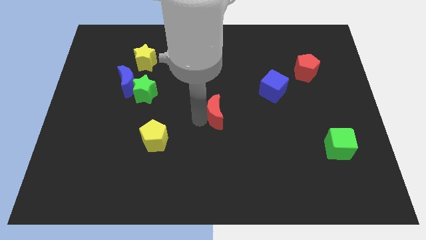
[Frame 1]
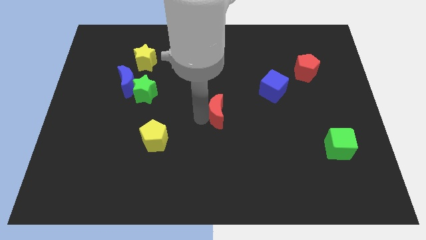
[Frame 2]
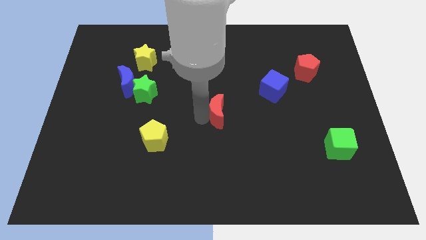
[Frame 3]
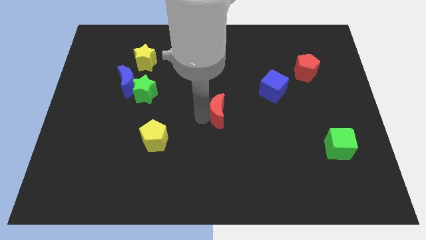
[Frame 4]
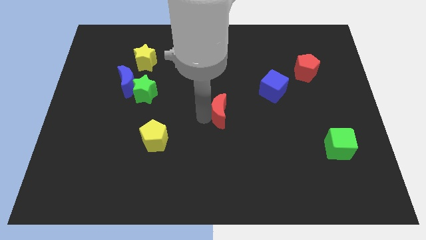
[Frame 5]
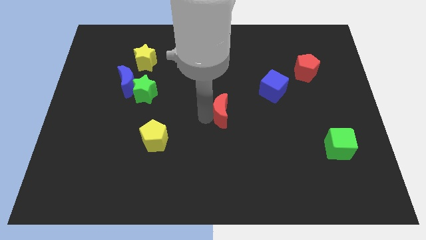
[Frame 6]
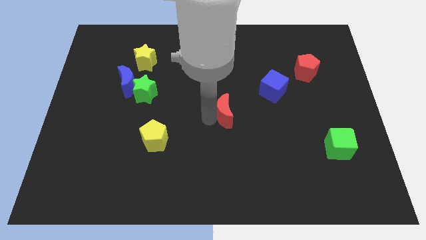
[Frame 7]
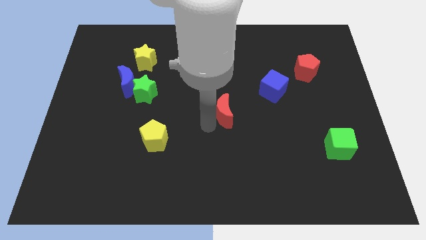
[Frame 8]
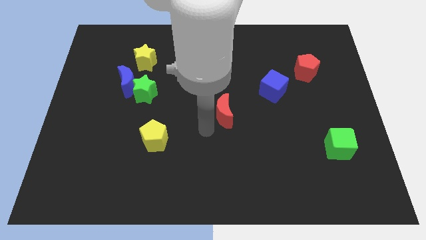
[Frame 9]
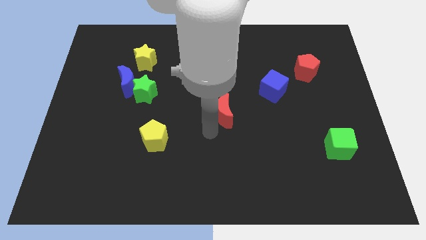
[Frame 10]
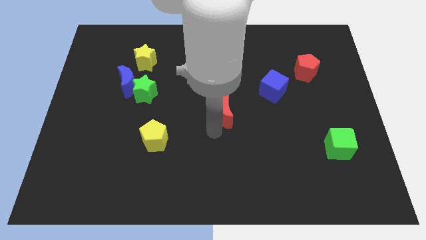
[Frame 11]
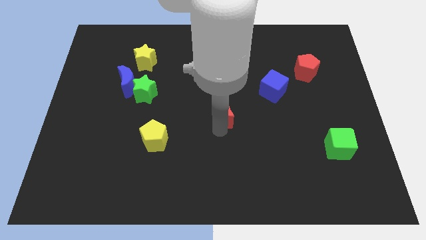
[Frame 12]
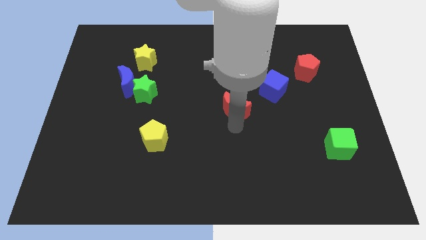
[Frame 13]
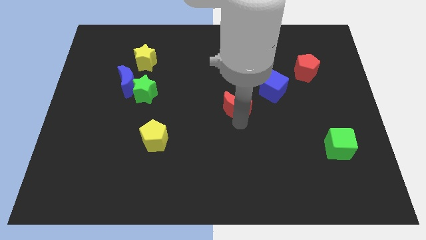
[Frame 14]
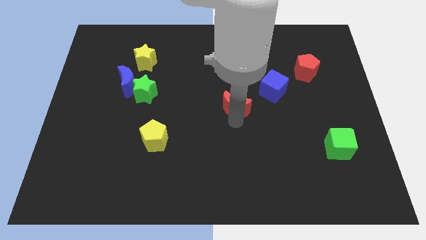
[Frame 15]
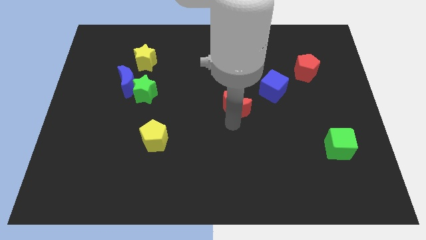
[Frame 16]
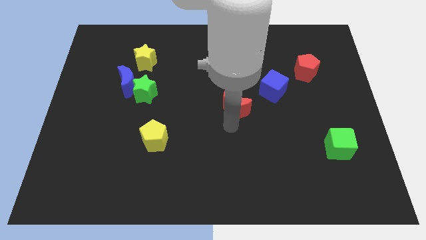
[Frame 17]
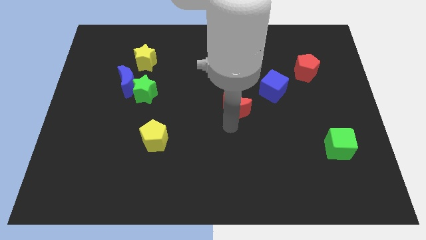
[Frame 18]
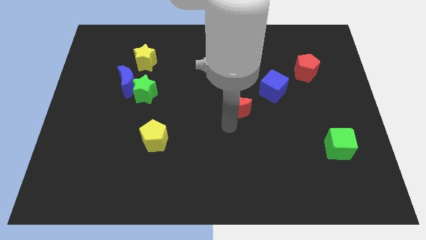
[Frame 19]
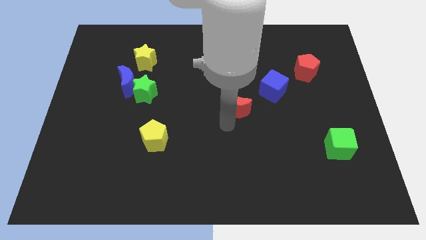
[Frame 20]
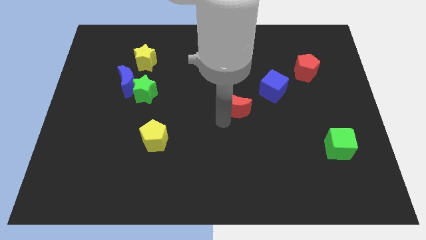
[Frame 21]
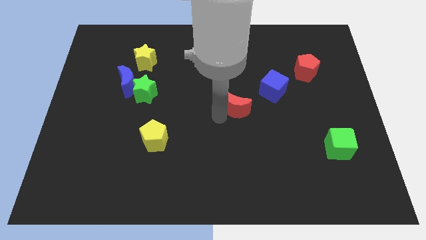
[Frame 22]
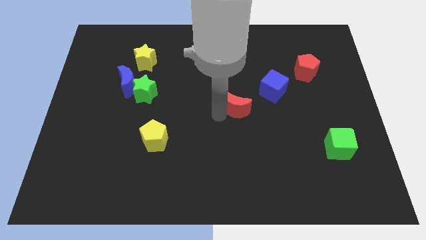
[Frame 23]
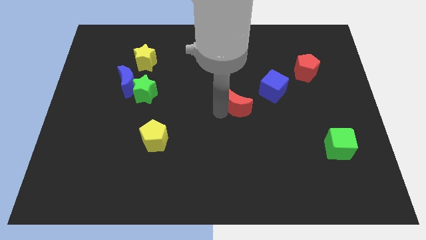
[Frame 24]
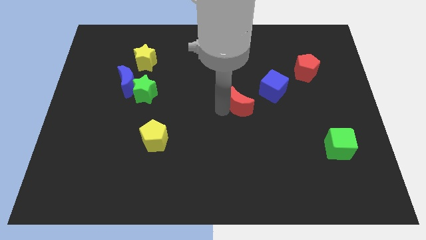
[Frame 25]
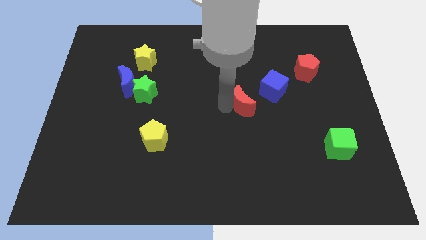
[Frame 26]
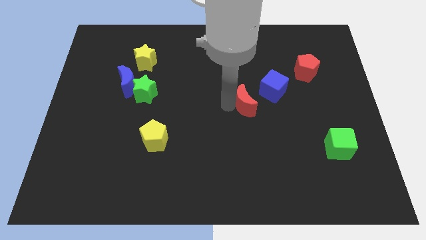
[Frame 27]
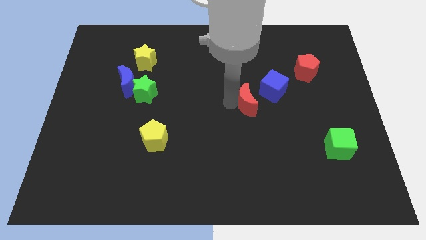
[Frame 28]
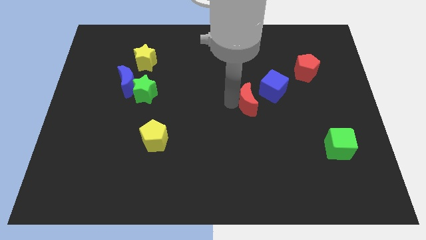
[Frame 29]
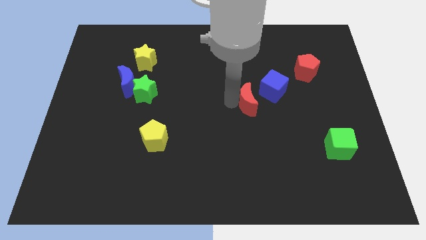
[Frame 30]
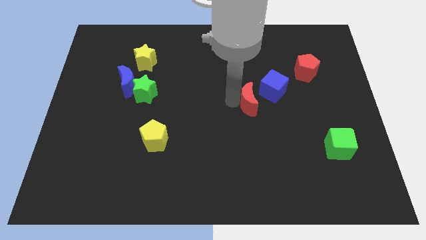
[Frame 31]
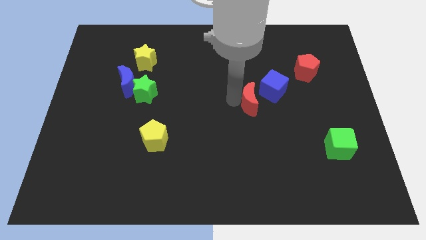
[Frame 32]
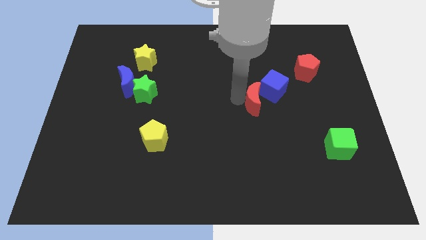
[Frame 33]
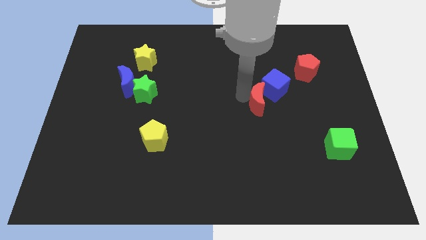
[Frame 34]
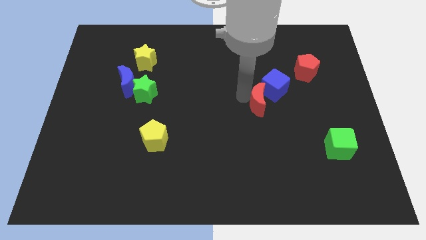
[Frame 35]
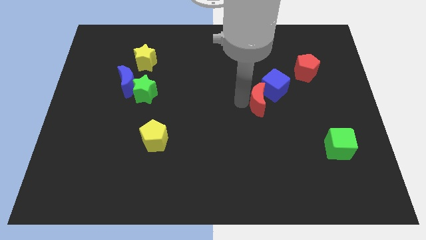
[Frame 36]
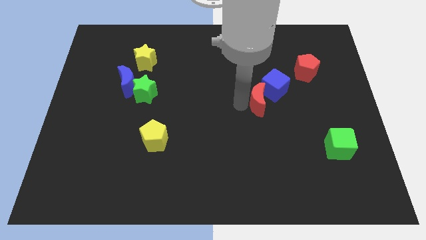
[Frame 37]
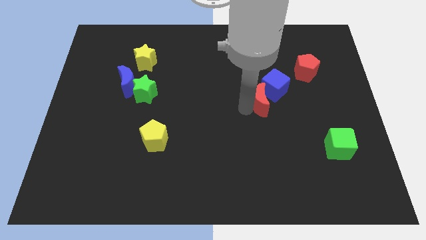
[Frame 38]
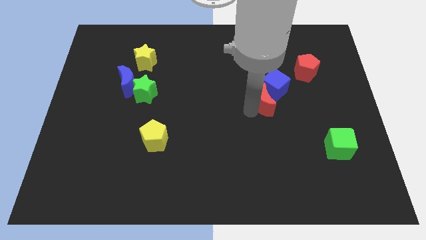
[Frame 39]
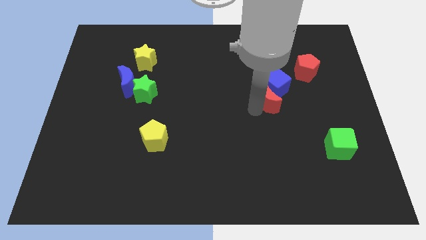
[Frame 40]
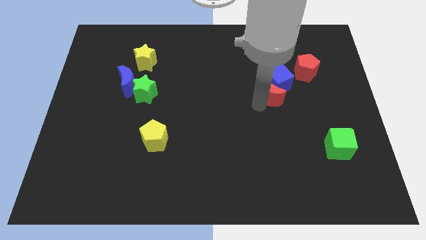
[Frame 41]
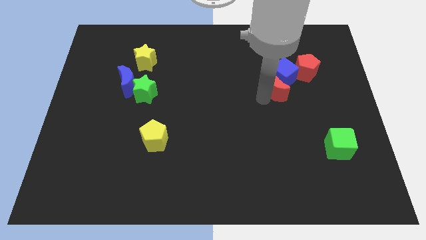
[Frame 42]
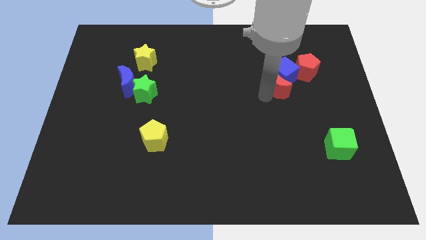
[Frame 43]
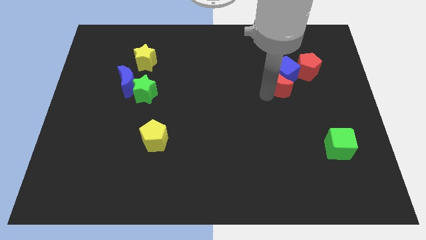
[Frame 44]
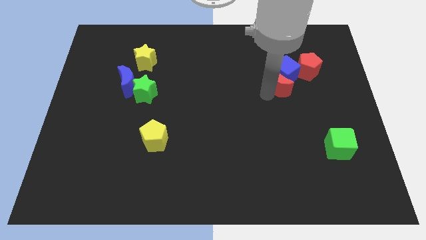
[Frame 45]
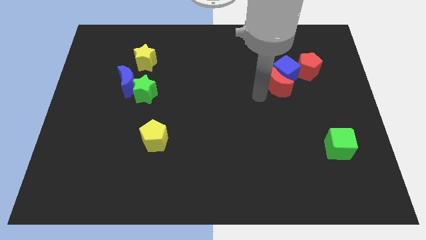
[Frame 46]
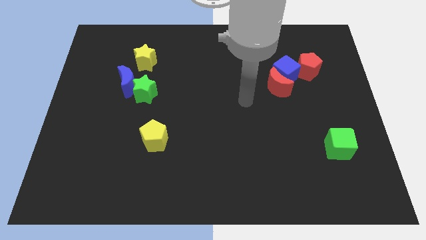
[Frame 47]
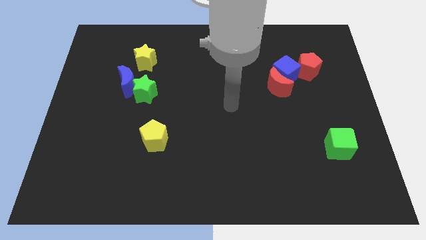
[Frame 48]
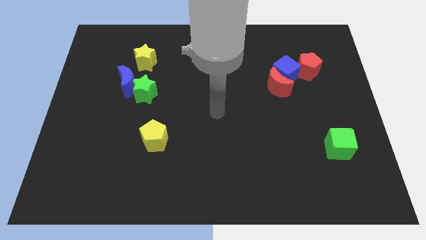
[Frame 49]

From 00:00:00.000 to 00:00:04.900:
push the red crescent and blue cube into the red pentagon

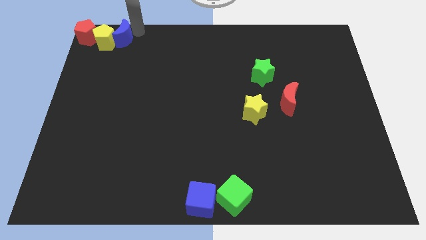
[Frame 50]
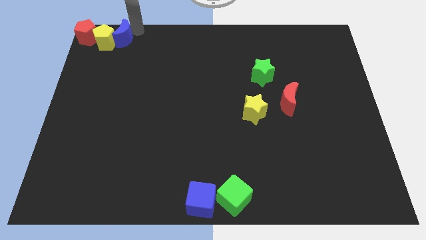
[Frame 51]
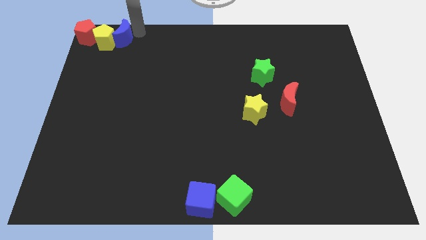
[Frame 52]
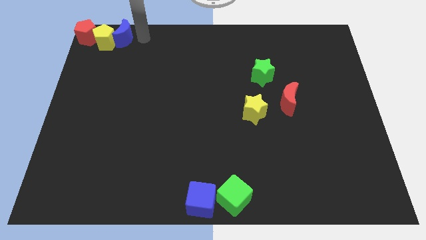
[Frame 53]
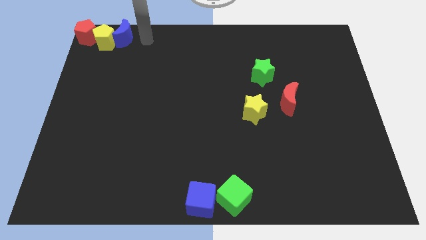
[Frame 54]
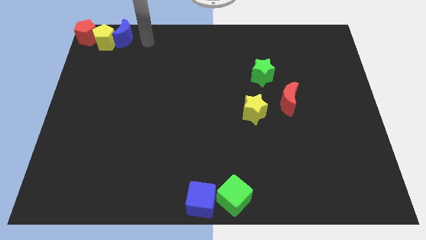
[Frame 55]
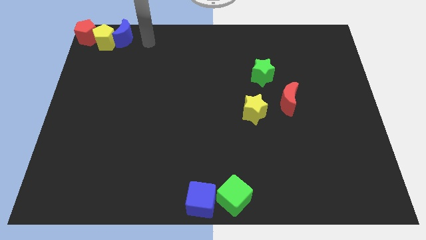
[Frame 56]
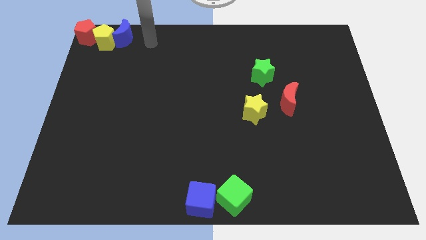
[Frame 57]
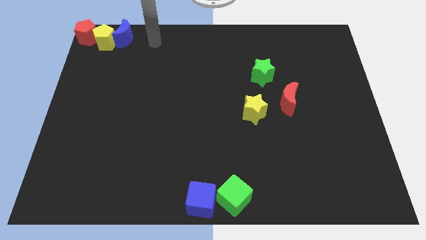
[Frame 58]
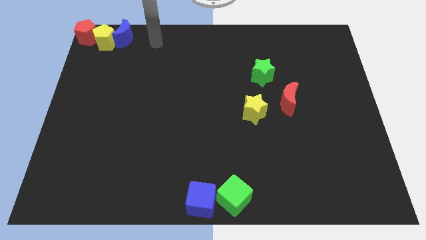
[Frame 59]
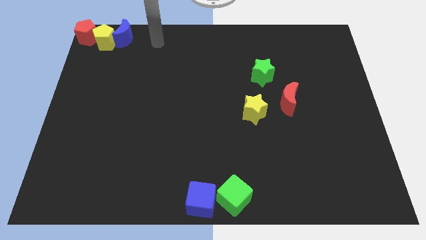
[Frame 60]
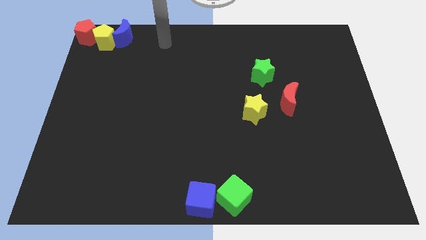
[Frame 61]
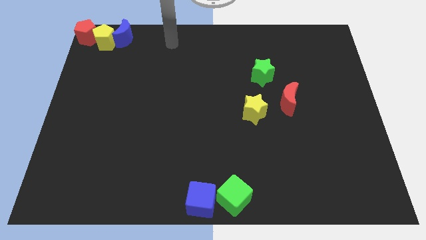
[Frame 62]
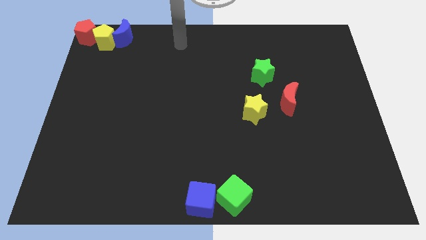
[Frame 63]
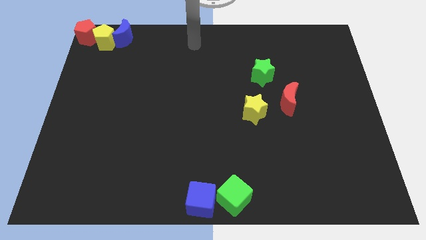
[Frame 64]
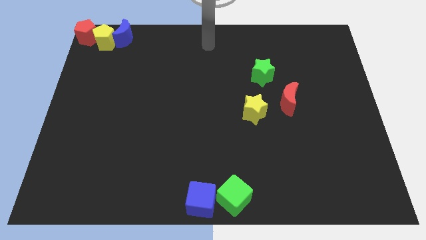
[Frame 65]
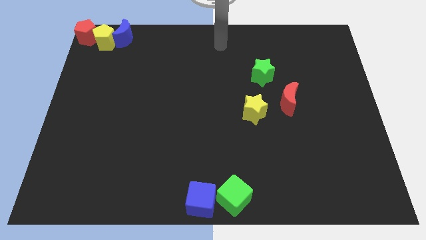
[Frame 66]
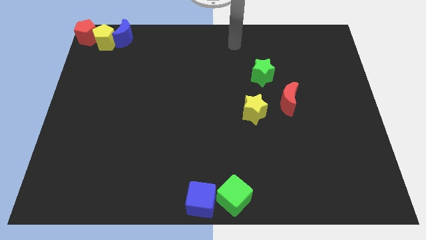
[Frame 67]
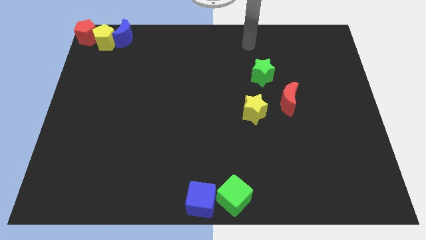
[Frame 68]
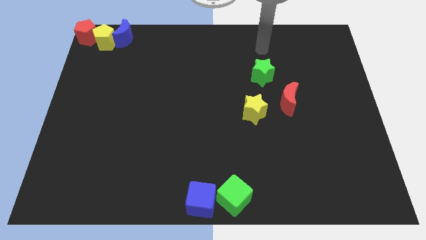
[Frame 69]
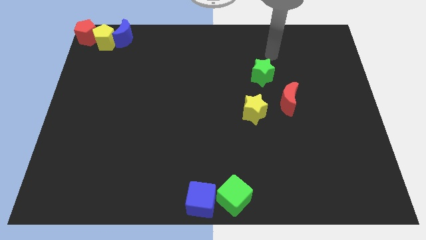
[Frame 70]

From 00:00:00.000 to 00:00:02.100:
move your arm to the top of the green star

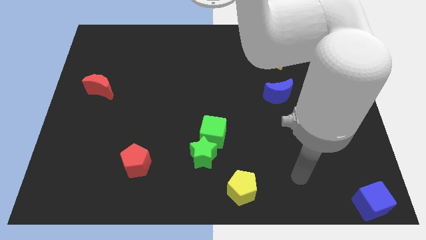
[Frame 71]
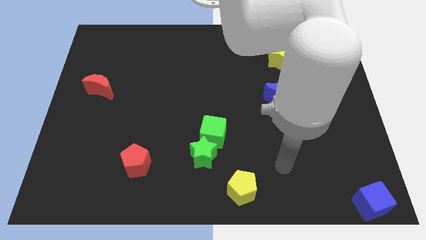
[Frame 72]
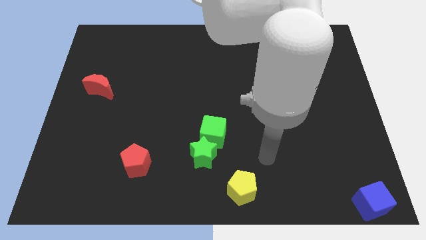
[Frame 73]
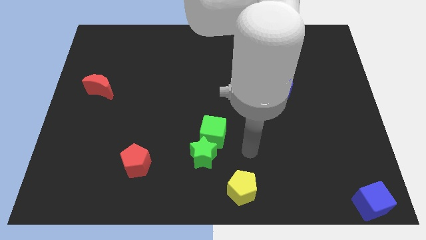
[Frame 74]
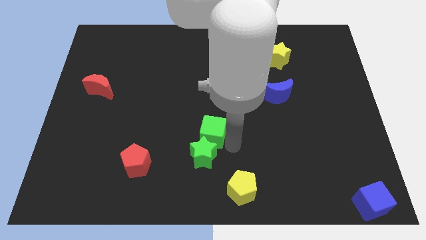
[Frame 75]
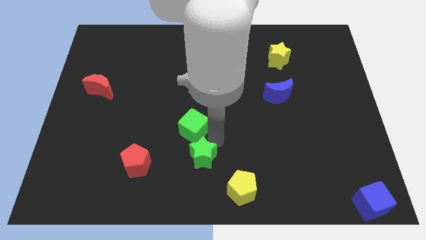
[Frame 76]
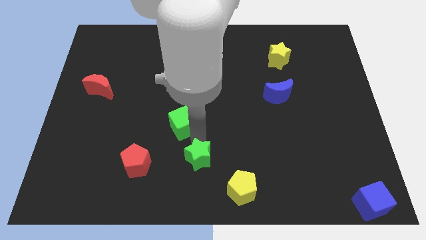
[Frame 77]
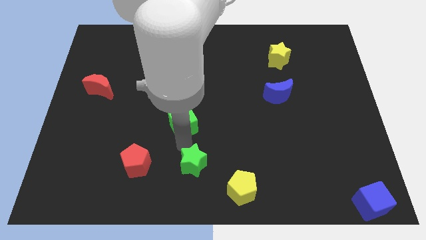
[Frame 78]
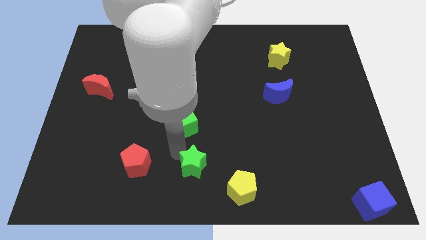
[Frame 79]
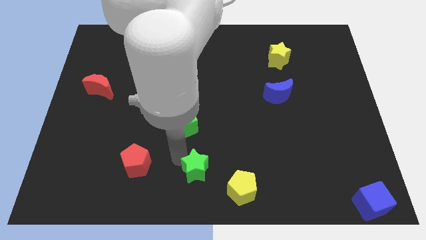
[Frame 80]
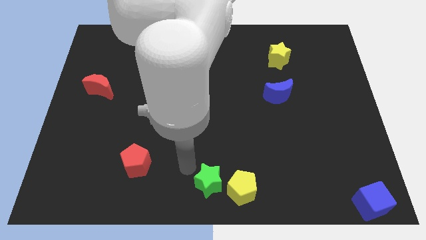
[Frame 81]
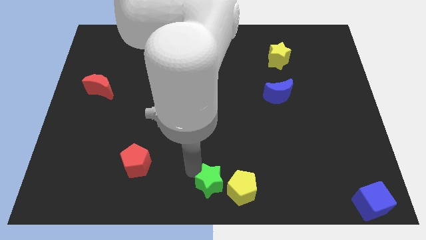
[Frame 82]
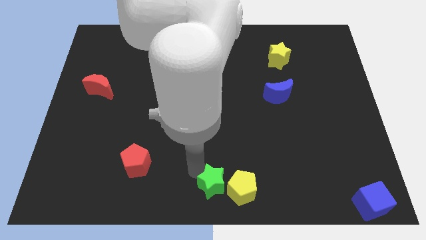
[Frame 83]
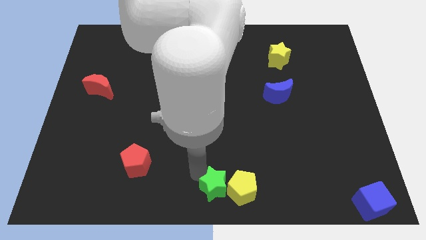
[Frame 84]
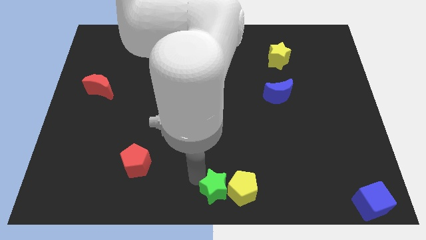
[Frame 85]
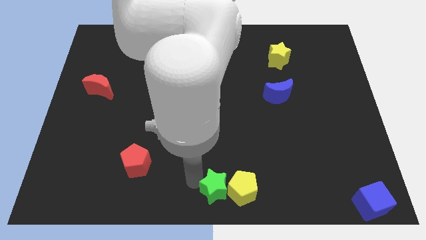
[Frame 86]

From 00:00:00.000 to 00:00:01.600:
separate the green blocks

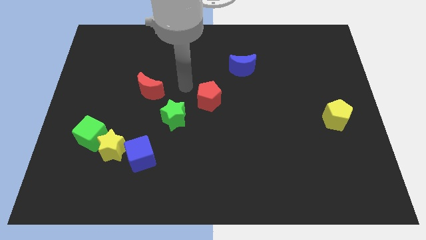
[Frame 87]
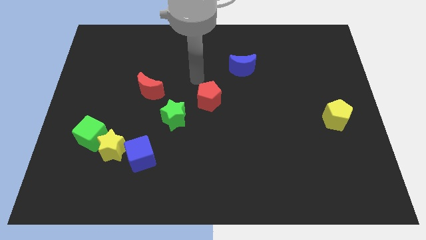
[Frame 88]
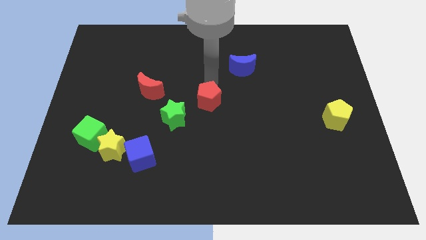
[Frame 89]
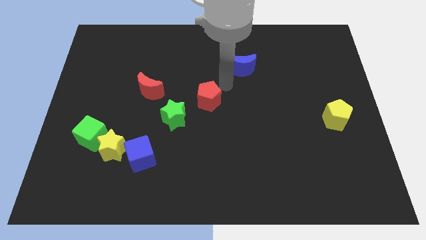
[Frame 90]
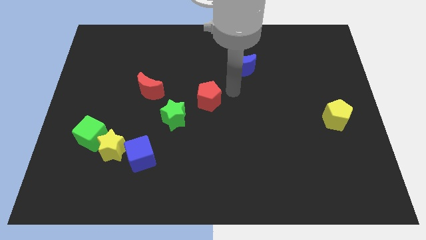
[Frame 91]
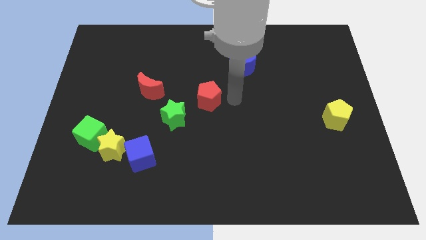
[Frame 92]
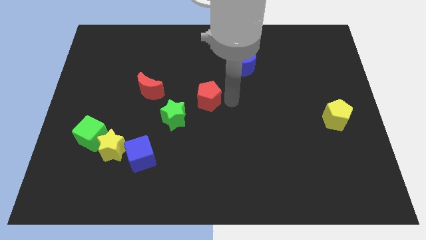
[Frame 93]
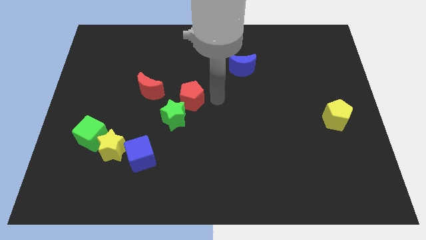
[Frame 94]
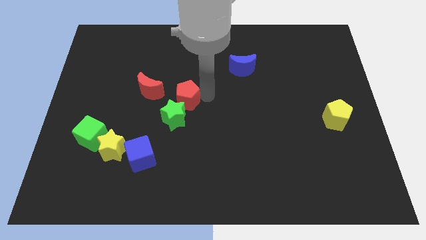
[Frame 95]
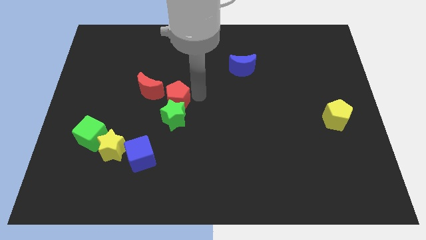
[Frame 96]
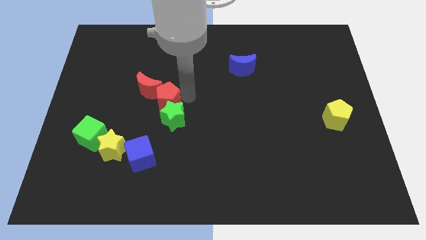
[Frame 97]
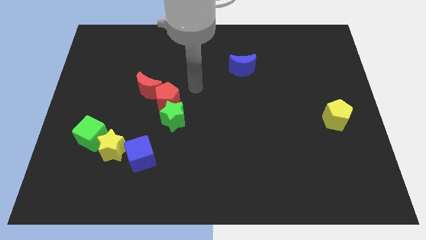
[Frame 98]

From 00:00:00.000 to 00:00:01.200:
place the red pentagon on top of the green star
